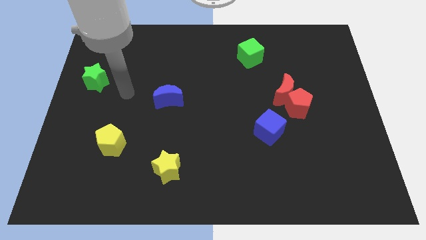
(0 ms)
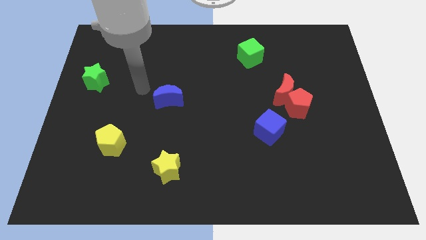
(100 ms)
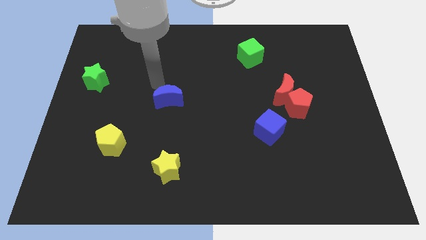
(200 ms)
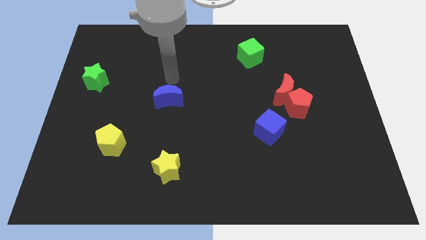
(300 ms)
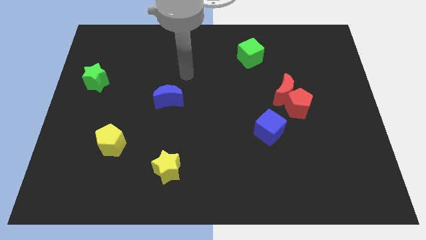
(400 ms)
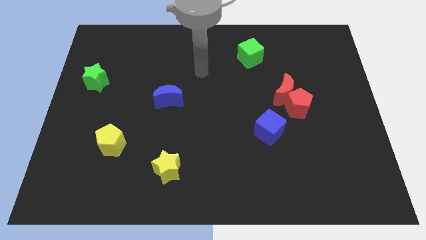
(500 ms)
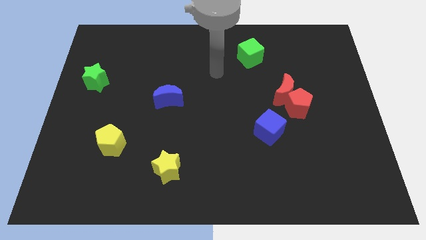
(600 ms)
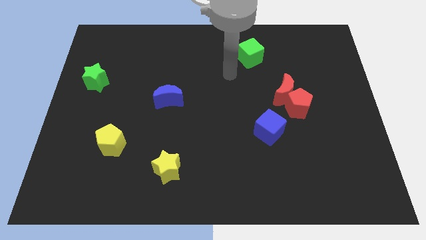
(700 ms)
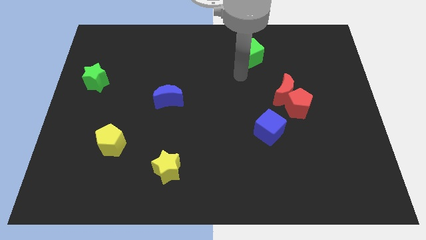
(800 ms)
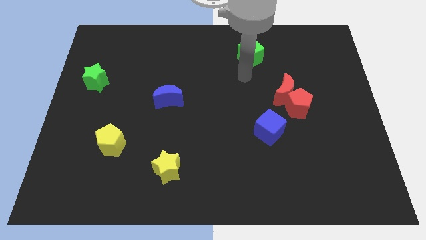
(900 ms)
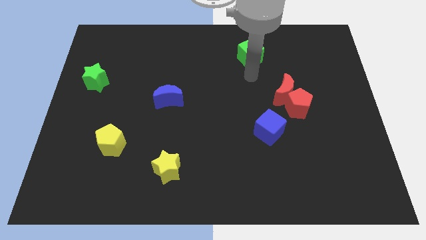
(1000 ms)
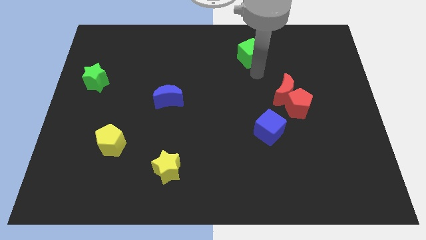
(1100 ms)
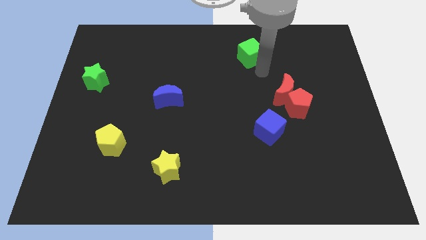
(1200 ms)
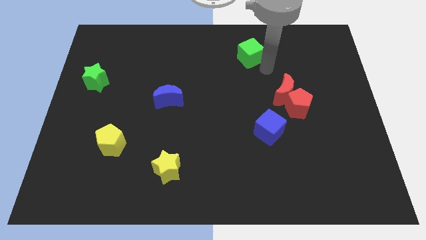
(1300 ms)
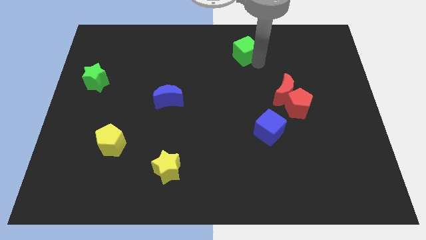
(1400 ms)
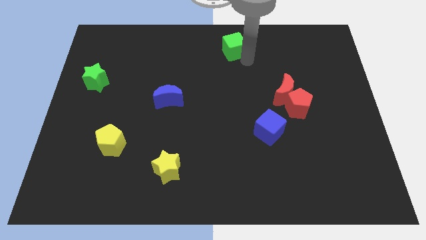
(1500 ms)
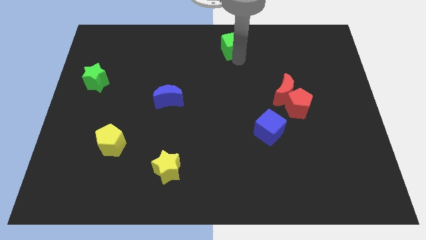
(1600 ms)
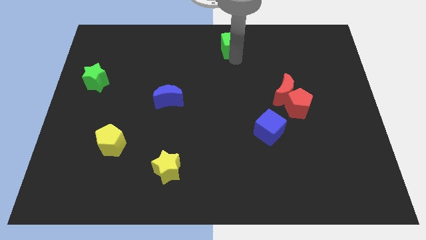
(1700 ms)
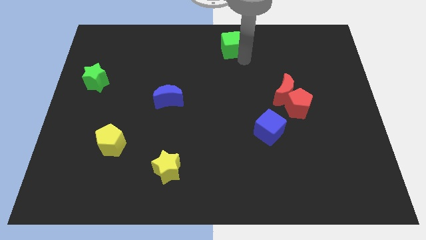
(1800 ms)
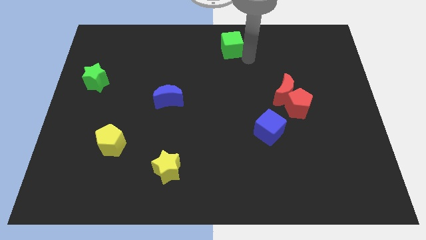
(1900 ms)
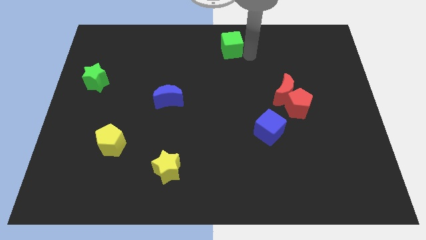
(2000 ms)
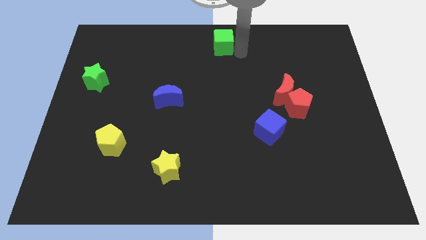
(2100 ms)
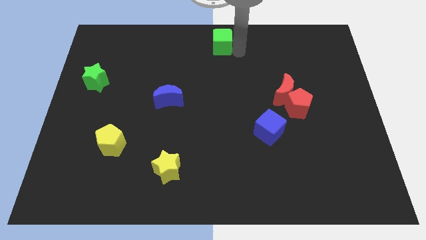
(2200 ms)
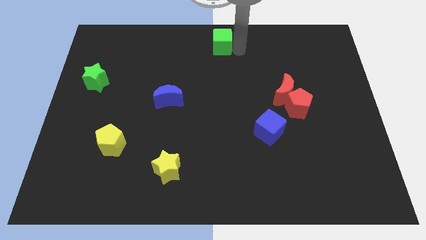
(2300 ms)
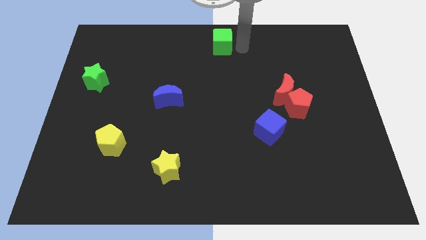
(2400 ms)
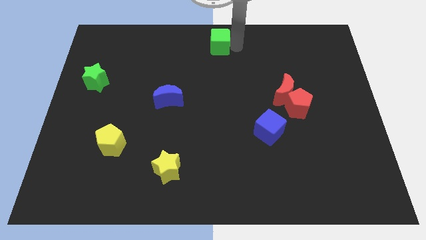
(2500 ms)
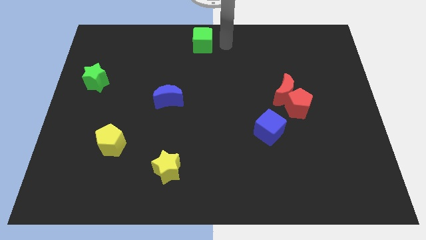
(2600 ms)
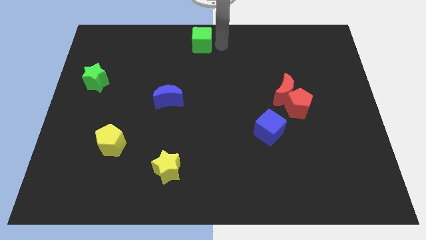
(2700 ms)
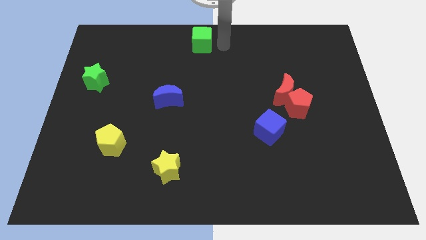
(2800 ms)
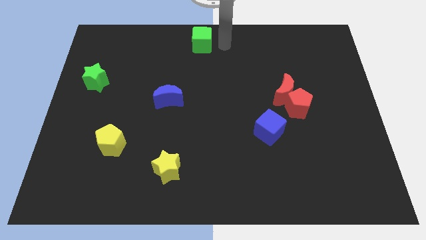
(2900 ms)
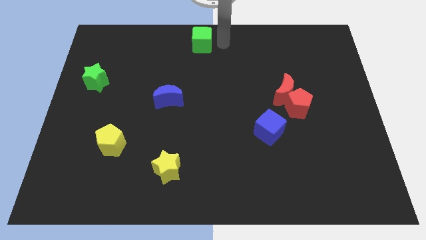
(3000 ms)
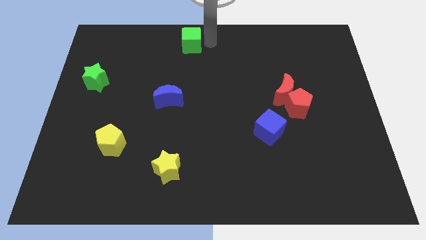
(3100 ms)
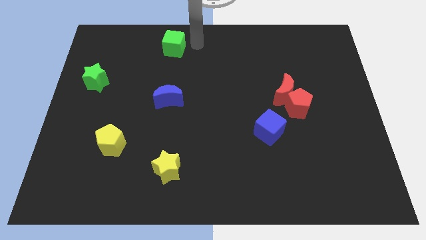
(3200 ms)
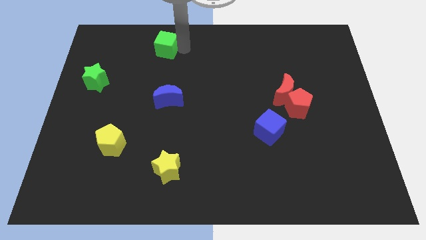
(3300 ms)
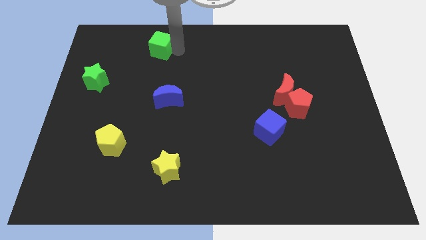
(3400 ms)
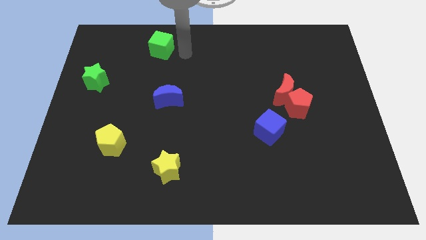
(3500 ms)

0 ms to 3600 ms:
place the green cube to the top of blue crescent

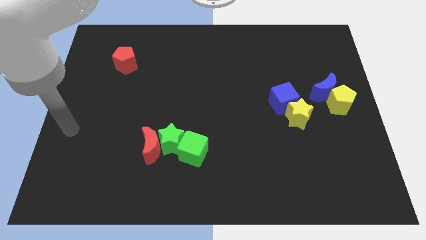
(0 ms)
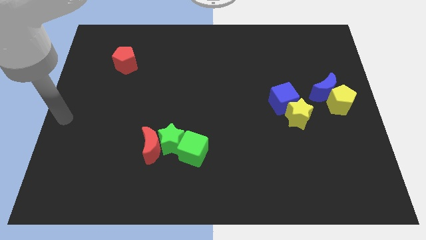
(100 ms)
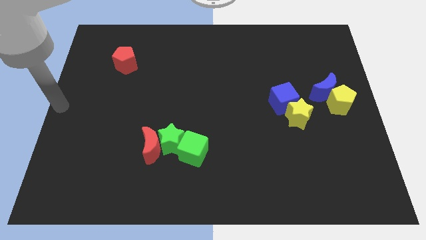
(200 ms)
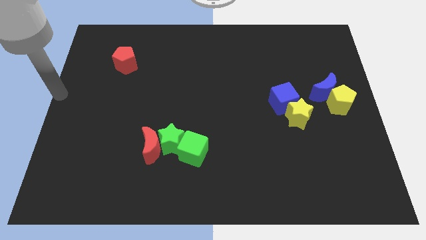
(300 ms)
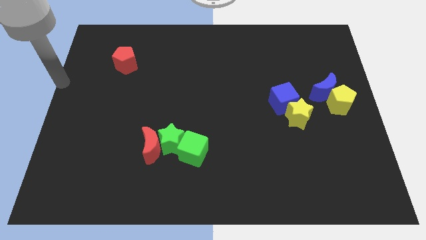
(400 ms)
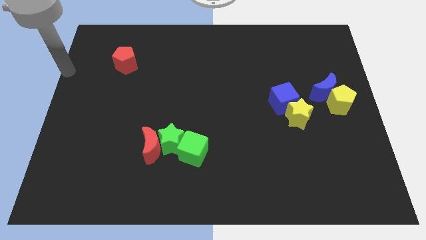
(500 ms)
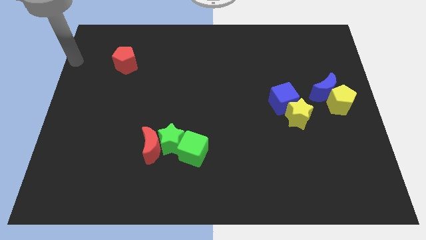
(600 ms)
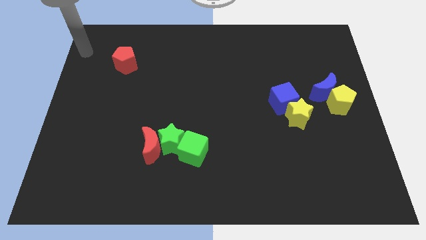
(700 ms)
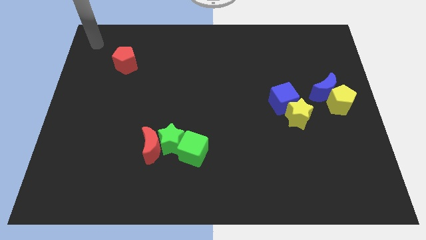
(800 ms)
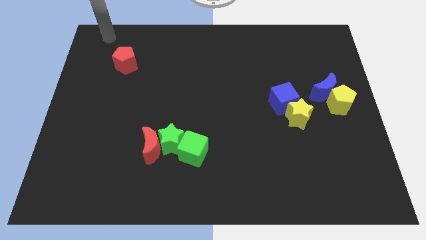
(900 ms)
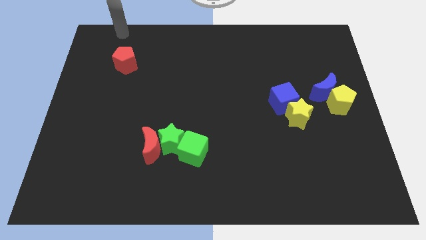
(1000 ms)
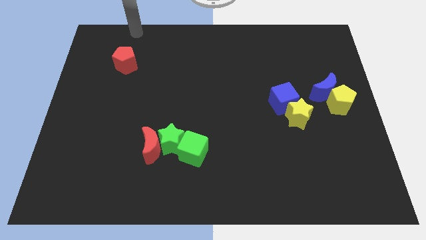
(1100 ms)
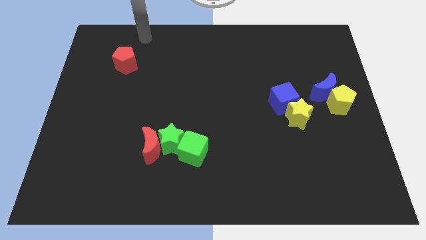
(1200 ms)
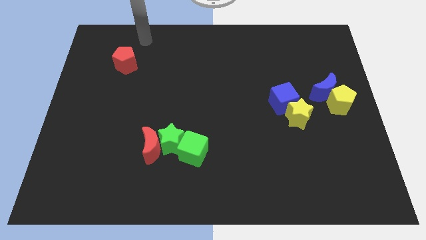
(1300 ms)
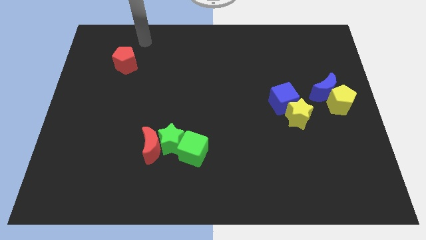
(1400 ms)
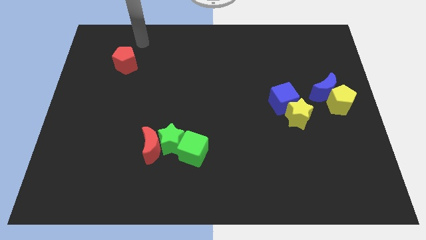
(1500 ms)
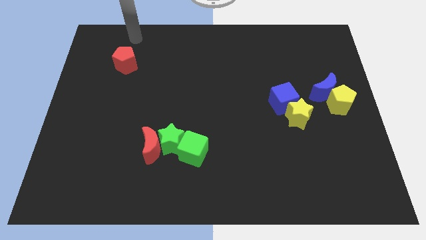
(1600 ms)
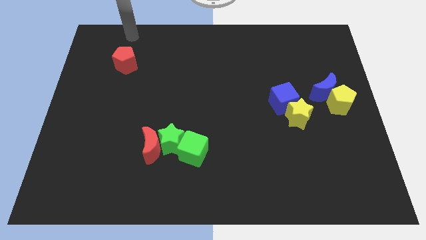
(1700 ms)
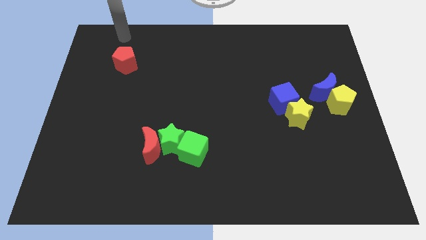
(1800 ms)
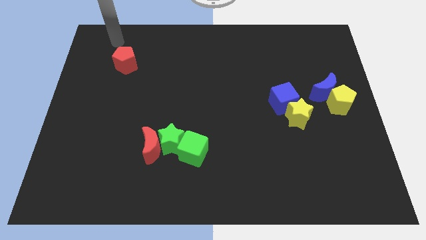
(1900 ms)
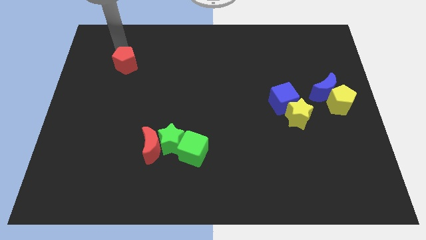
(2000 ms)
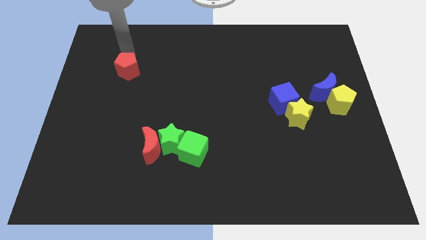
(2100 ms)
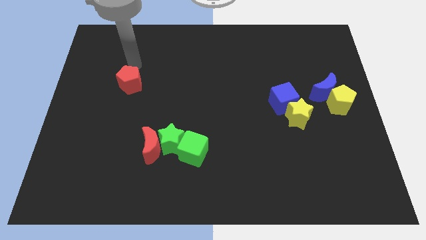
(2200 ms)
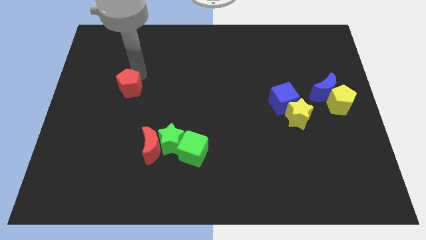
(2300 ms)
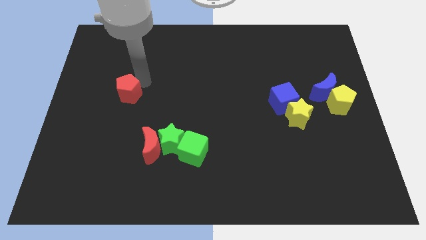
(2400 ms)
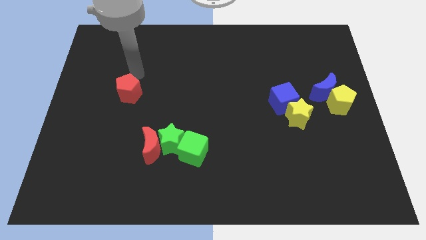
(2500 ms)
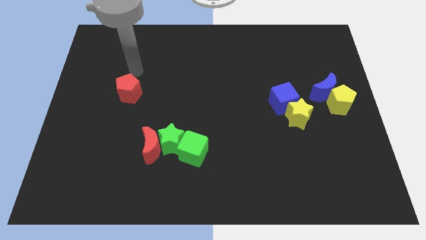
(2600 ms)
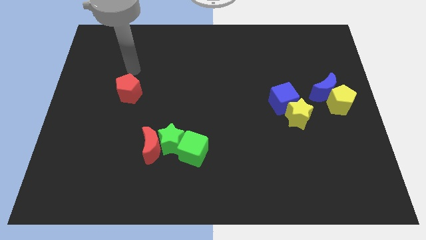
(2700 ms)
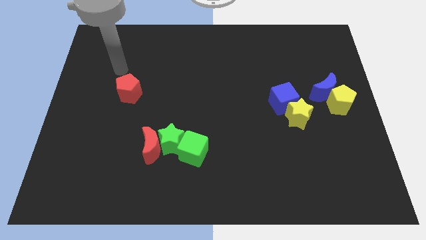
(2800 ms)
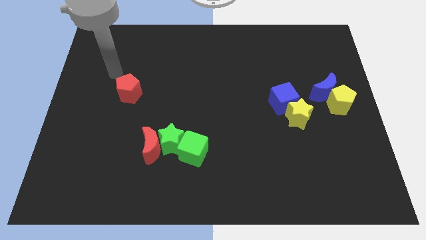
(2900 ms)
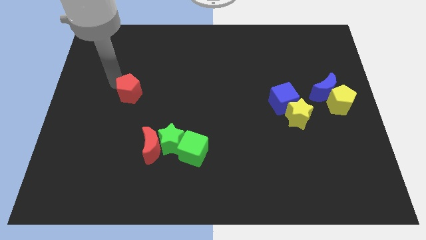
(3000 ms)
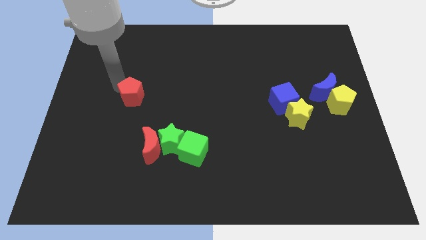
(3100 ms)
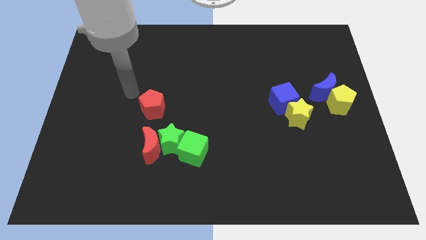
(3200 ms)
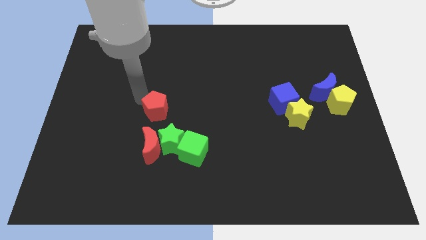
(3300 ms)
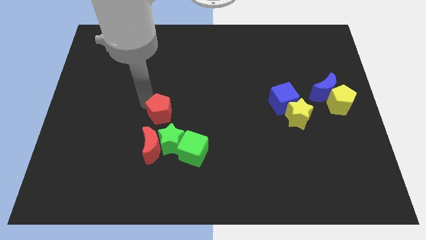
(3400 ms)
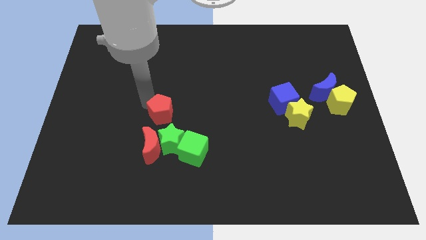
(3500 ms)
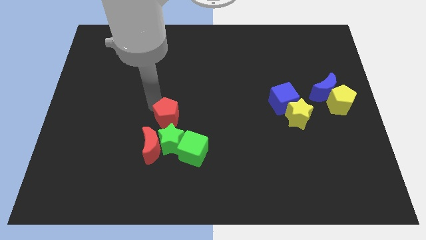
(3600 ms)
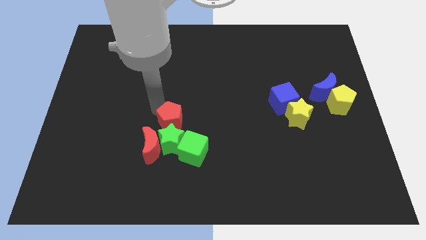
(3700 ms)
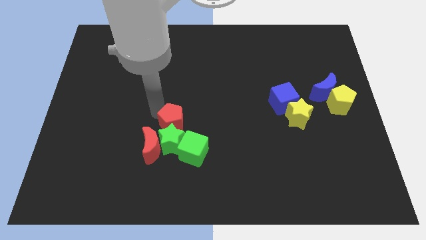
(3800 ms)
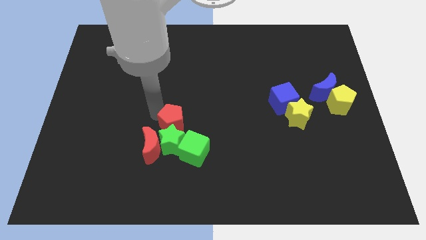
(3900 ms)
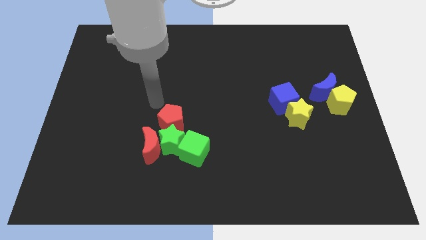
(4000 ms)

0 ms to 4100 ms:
place the red pentagon above the green star

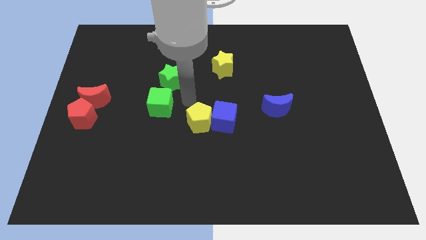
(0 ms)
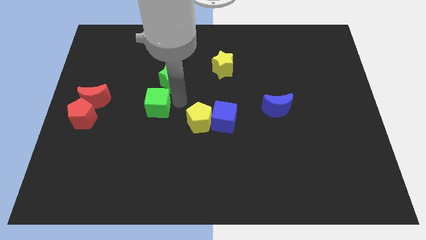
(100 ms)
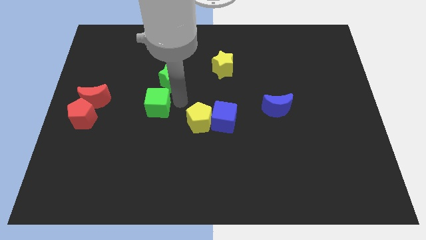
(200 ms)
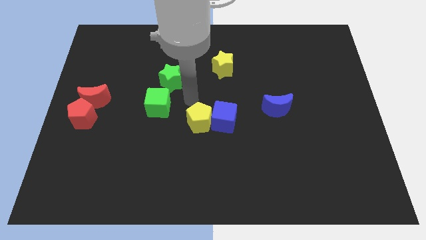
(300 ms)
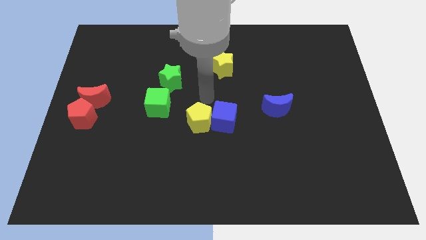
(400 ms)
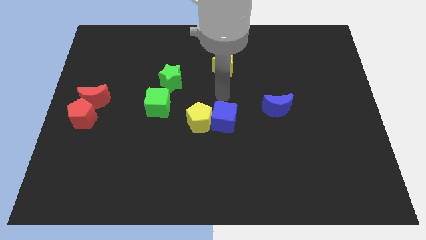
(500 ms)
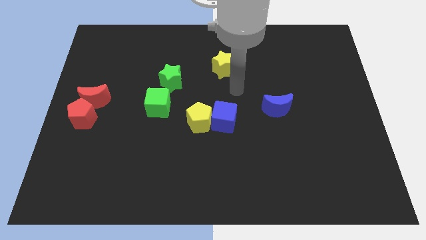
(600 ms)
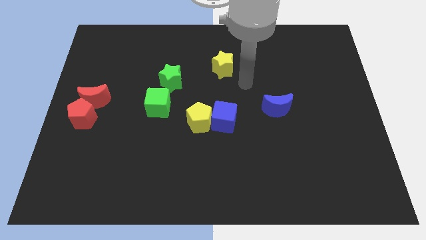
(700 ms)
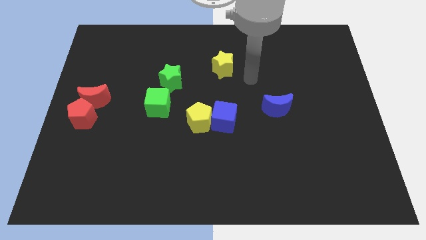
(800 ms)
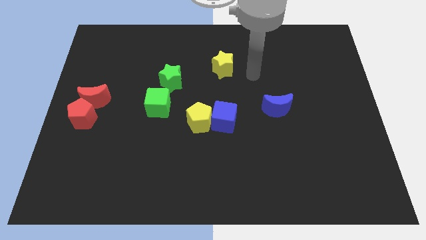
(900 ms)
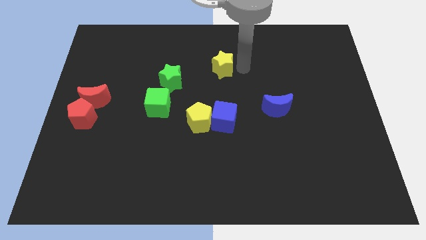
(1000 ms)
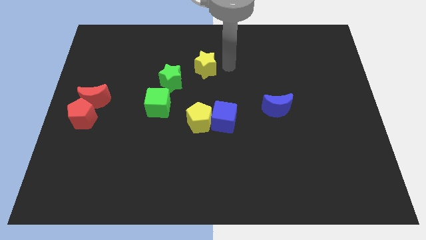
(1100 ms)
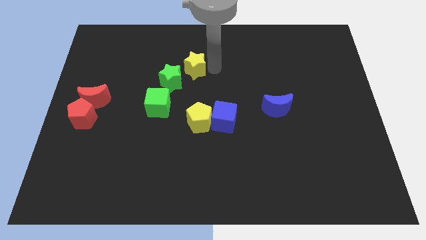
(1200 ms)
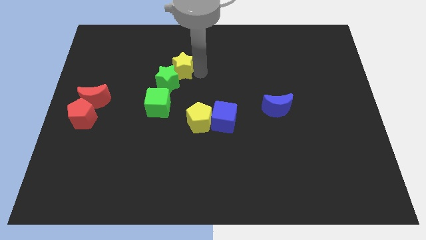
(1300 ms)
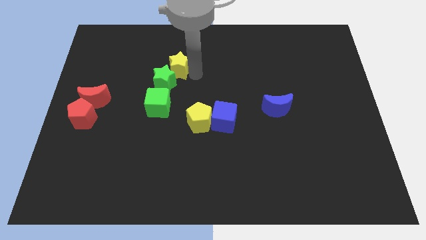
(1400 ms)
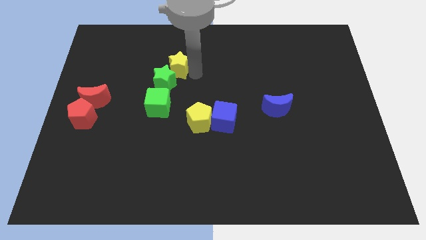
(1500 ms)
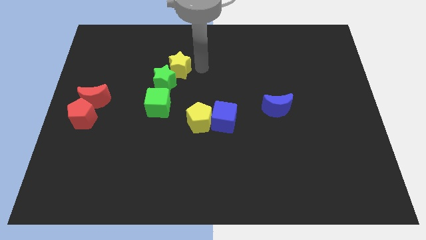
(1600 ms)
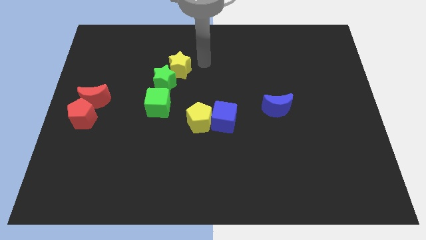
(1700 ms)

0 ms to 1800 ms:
move the yellow star to the top side of the green star
